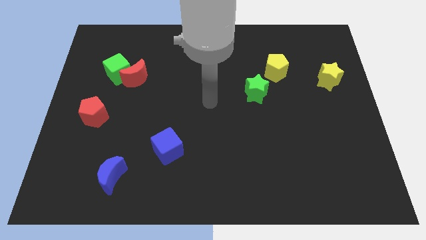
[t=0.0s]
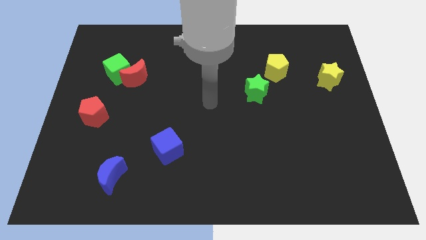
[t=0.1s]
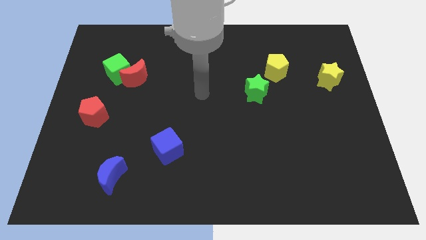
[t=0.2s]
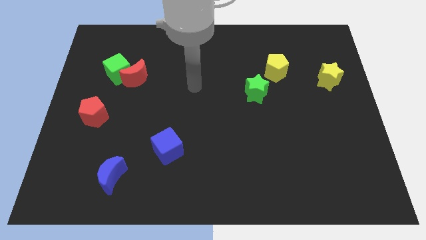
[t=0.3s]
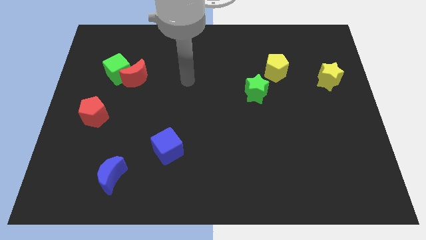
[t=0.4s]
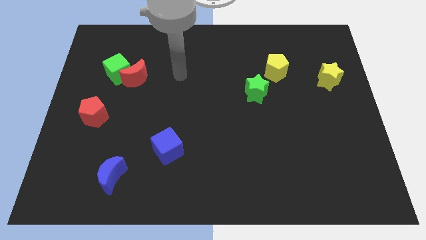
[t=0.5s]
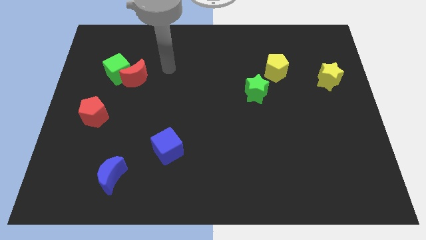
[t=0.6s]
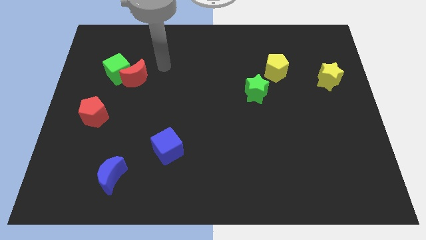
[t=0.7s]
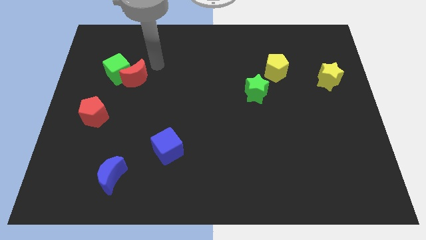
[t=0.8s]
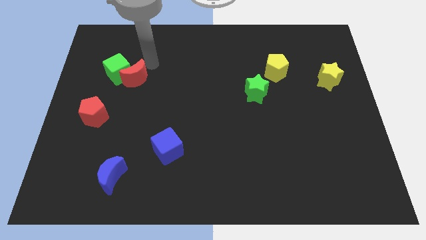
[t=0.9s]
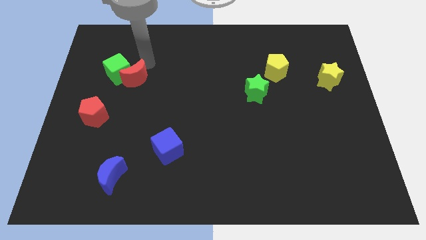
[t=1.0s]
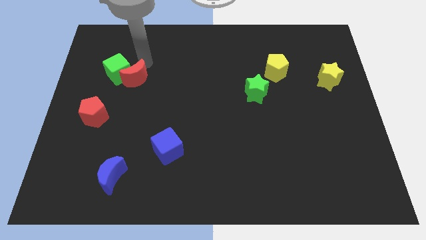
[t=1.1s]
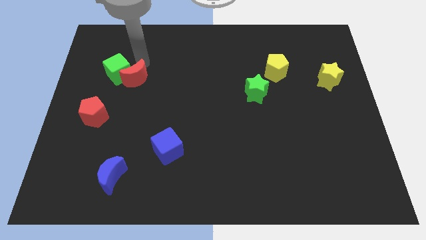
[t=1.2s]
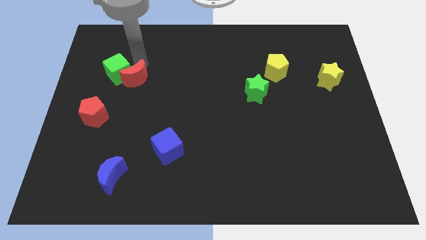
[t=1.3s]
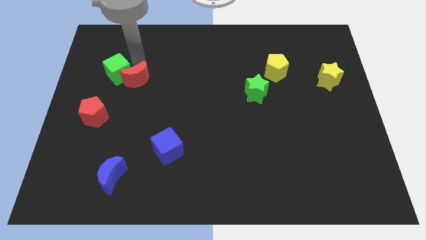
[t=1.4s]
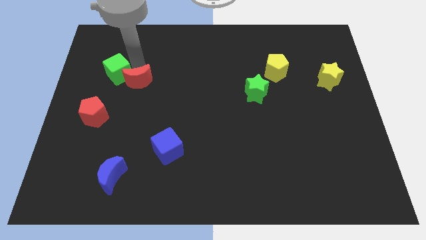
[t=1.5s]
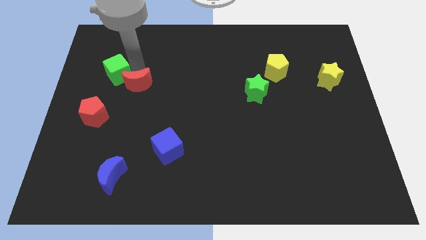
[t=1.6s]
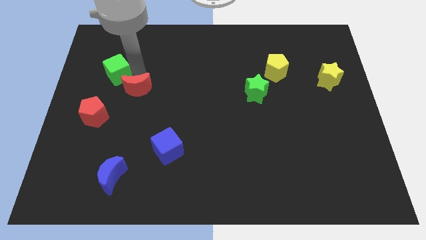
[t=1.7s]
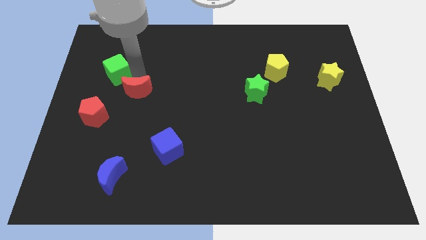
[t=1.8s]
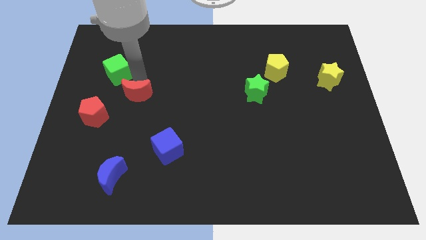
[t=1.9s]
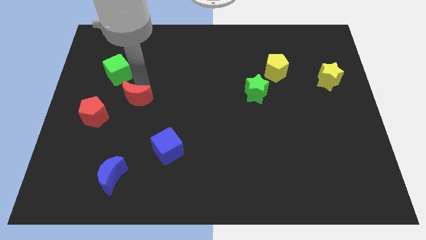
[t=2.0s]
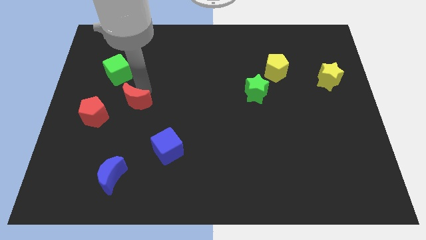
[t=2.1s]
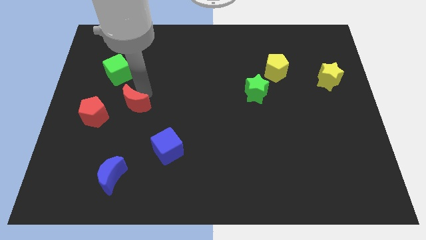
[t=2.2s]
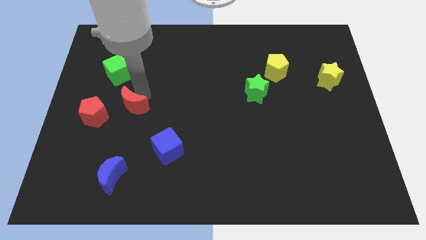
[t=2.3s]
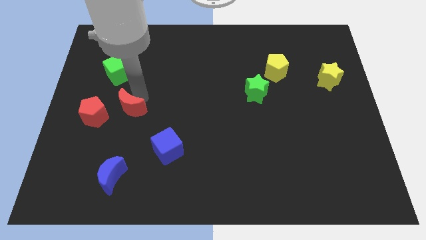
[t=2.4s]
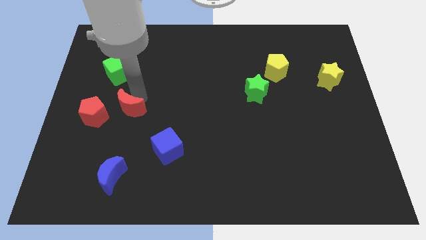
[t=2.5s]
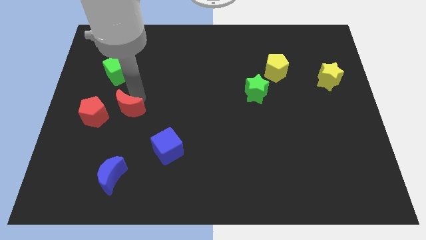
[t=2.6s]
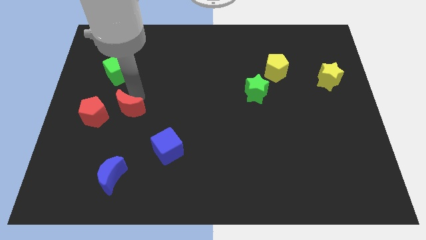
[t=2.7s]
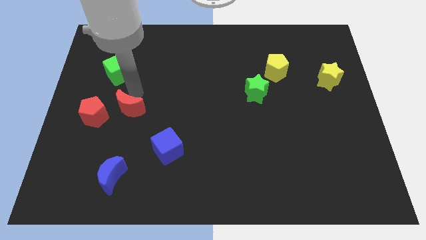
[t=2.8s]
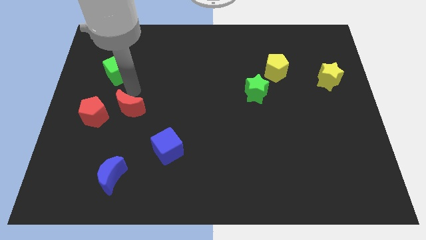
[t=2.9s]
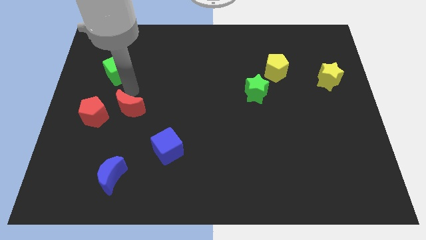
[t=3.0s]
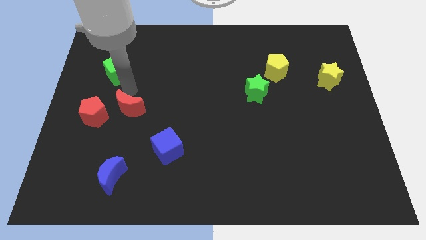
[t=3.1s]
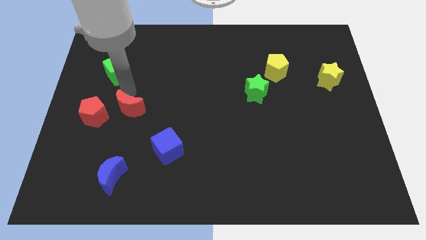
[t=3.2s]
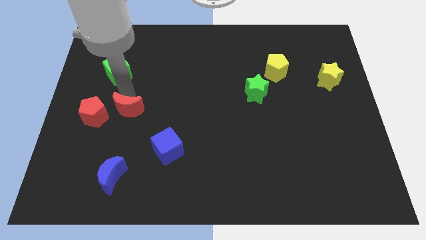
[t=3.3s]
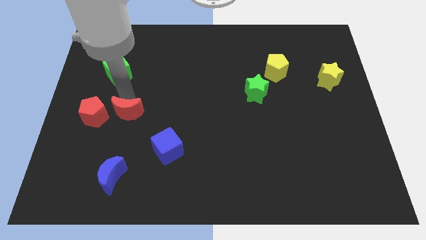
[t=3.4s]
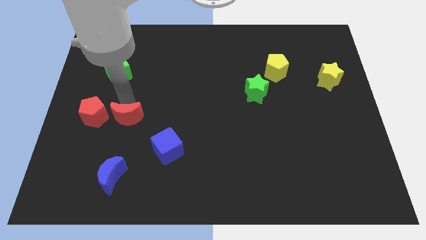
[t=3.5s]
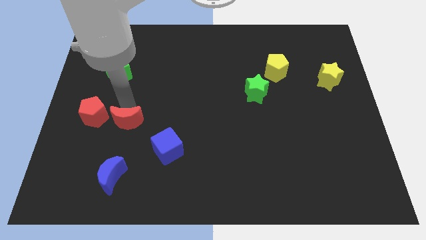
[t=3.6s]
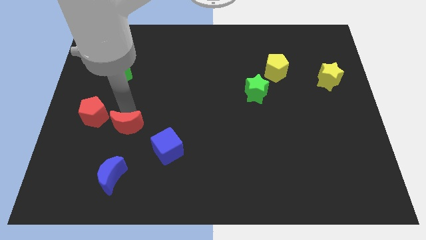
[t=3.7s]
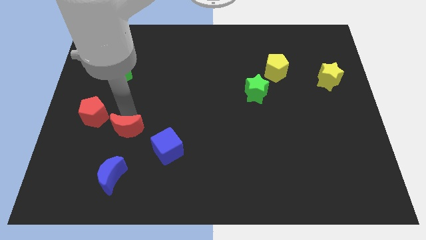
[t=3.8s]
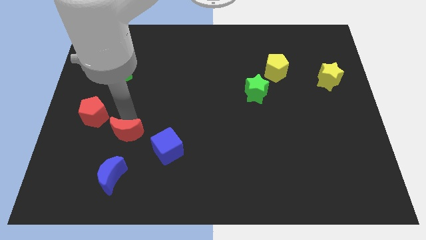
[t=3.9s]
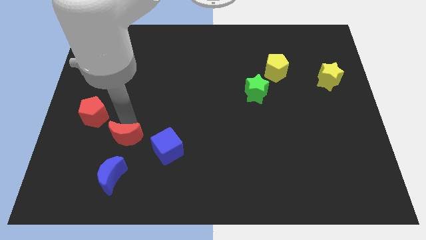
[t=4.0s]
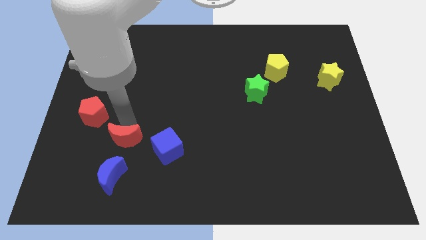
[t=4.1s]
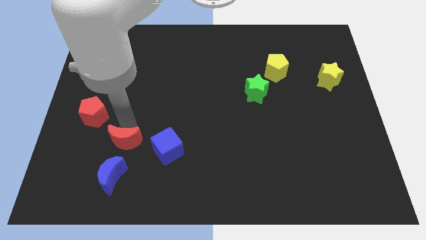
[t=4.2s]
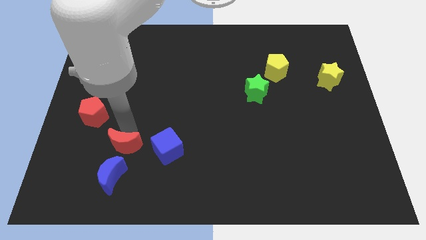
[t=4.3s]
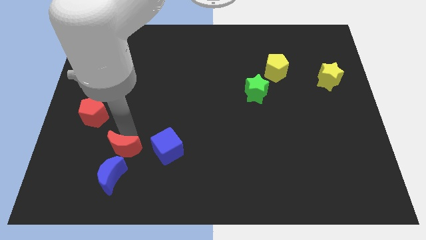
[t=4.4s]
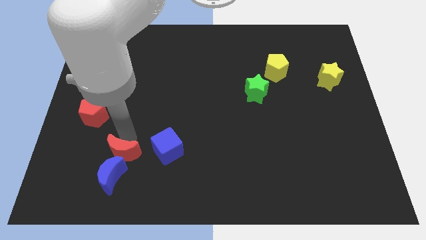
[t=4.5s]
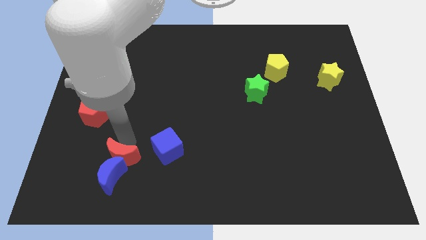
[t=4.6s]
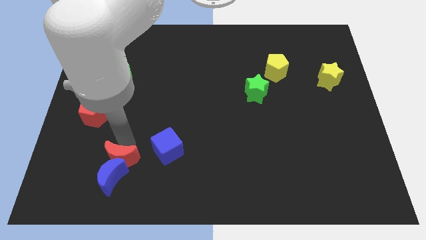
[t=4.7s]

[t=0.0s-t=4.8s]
move the red moon close to the blue moon

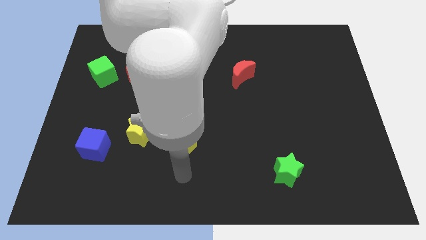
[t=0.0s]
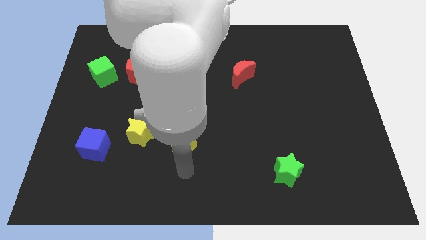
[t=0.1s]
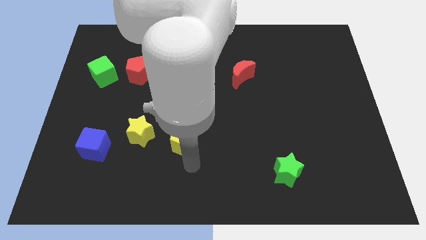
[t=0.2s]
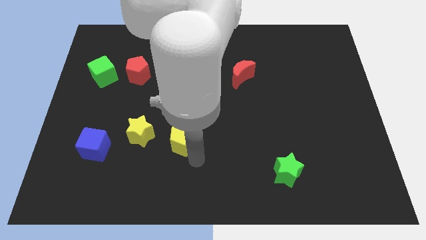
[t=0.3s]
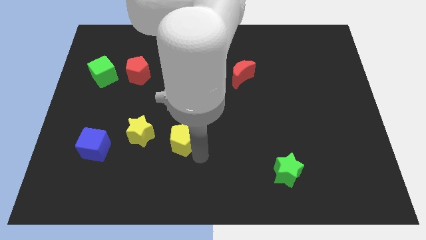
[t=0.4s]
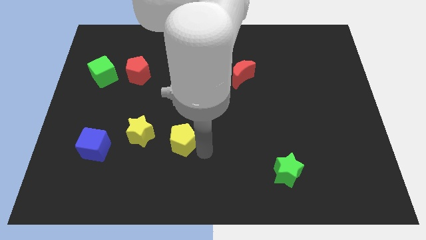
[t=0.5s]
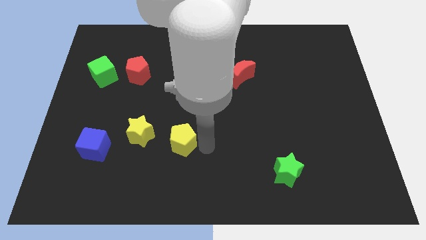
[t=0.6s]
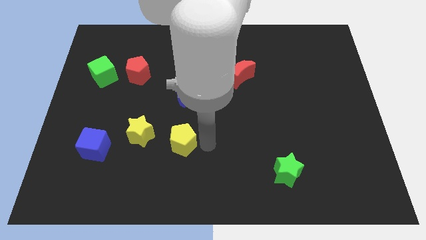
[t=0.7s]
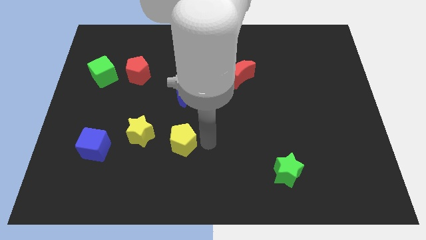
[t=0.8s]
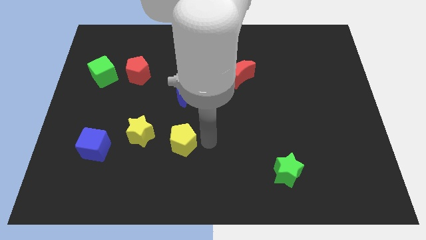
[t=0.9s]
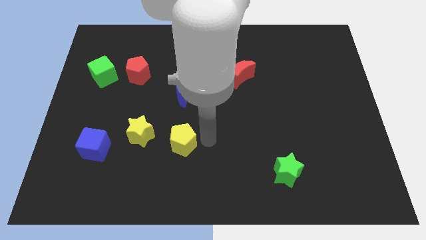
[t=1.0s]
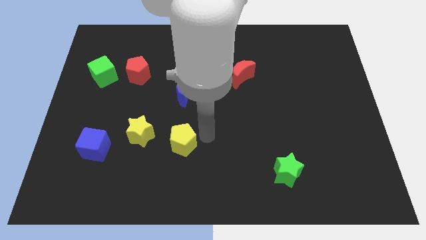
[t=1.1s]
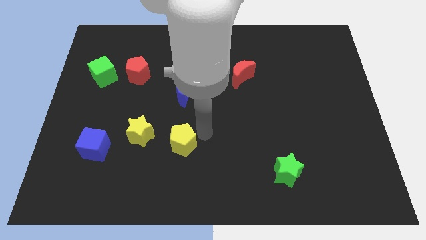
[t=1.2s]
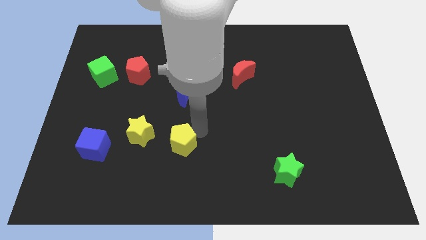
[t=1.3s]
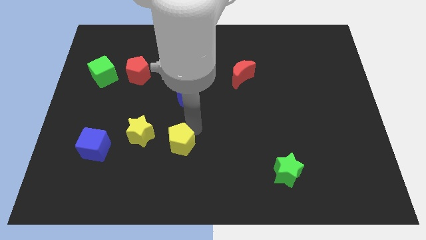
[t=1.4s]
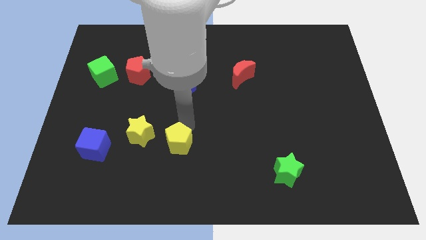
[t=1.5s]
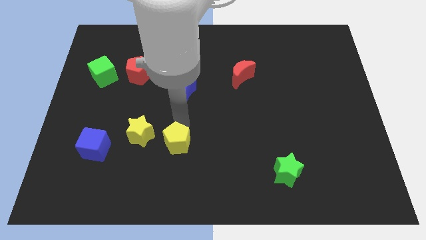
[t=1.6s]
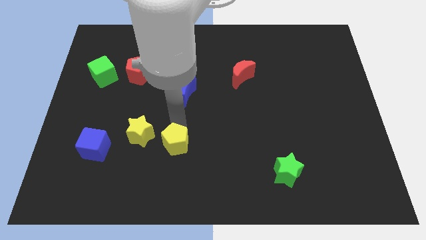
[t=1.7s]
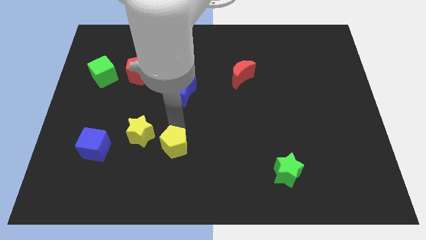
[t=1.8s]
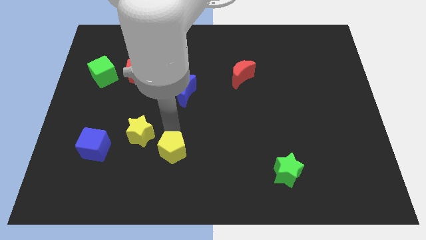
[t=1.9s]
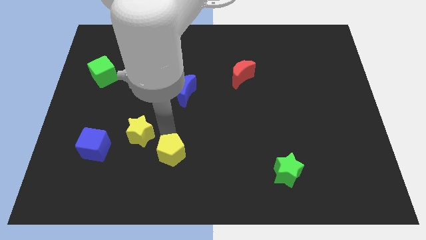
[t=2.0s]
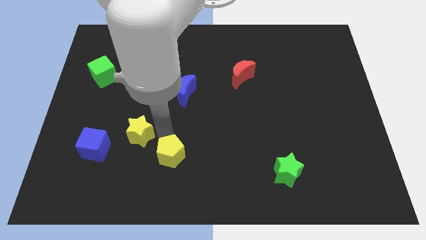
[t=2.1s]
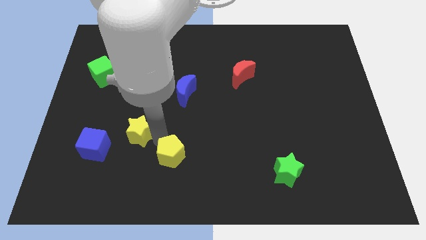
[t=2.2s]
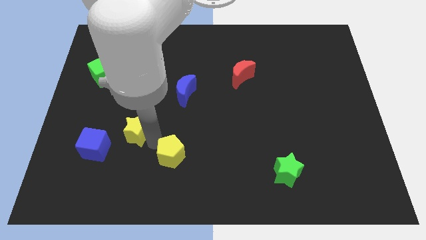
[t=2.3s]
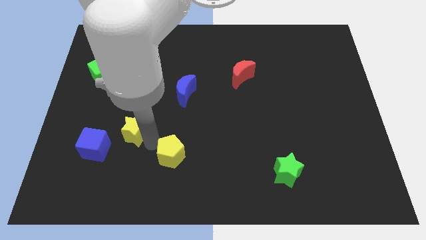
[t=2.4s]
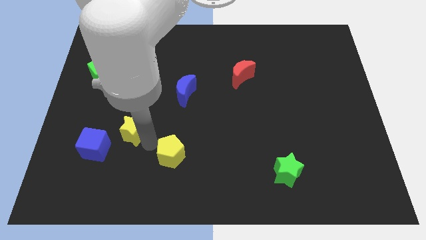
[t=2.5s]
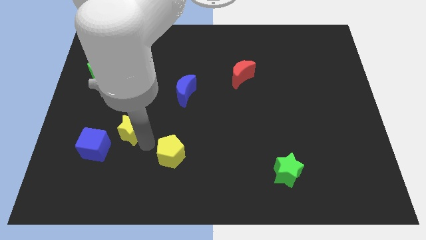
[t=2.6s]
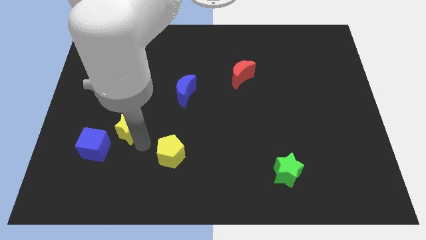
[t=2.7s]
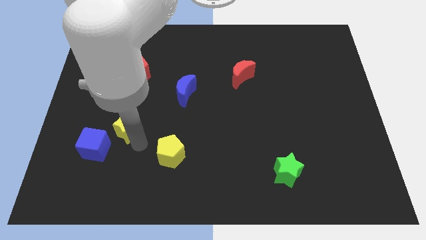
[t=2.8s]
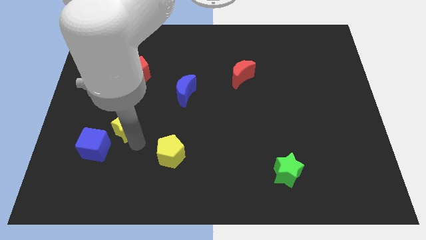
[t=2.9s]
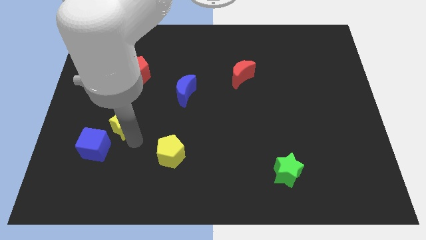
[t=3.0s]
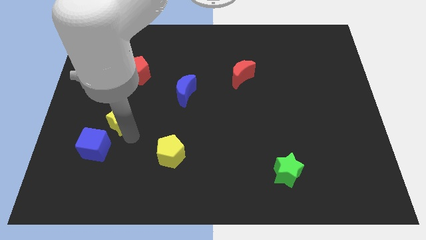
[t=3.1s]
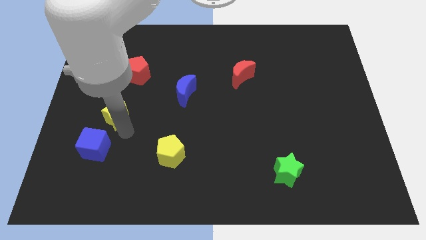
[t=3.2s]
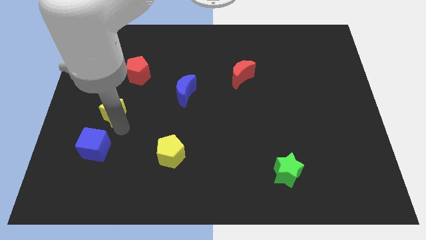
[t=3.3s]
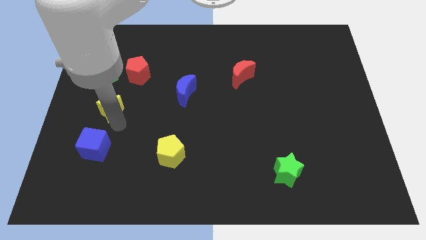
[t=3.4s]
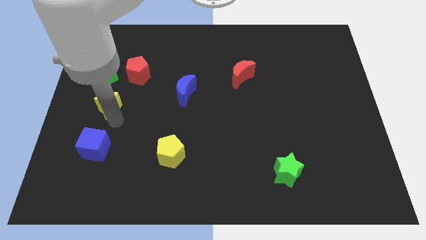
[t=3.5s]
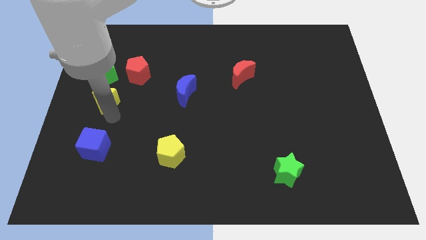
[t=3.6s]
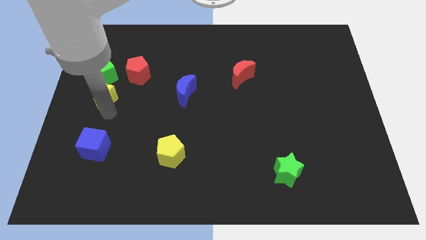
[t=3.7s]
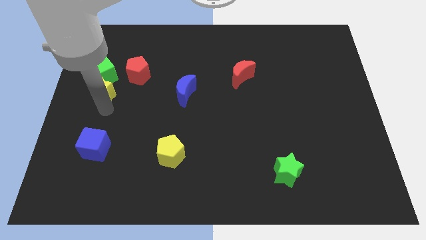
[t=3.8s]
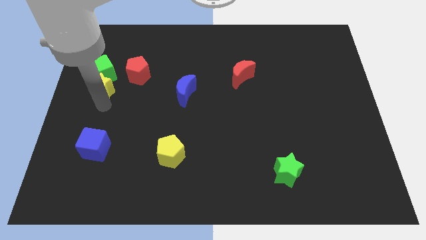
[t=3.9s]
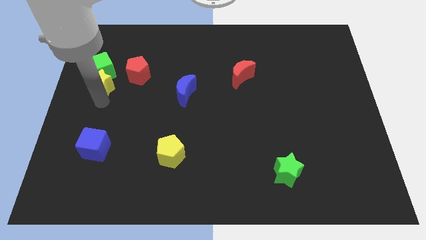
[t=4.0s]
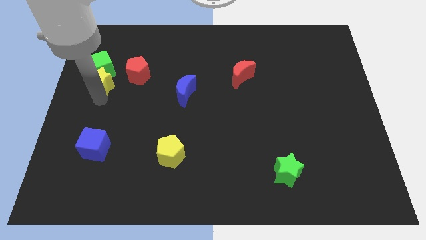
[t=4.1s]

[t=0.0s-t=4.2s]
put the yellow star close to the green cube
